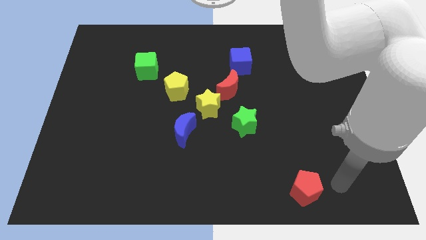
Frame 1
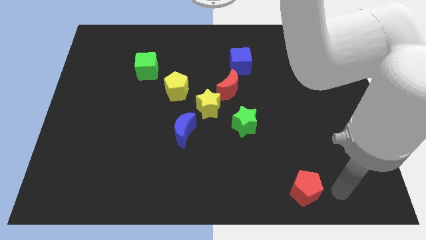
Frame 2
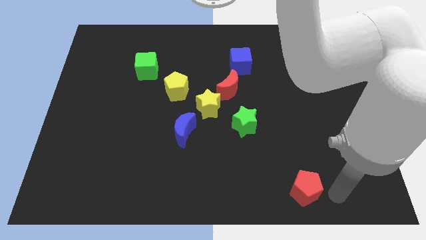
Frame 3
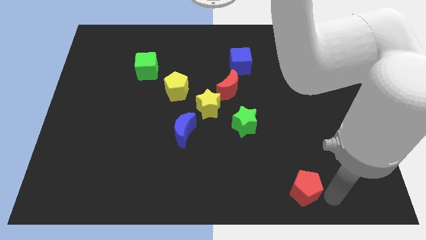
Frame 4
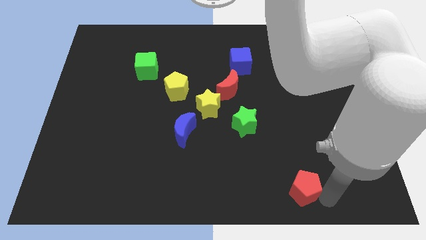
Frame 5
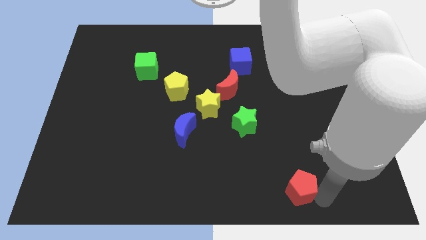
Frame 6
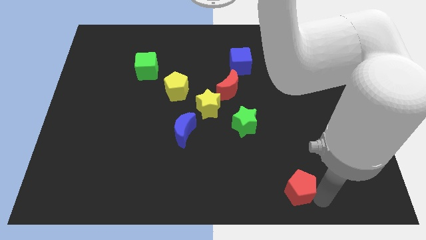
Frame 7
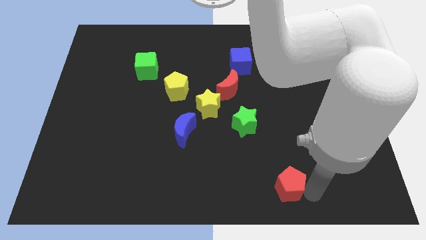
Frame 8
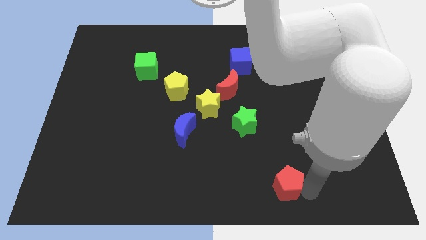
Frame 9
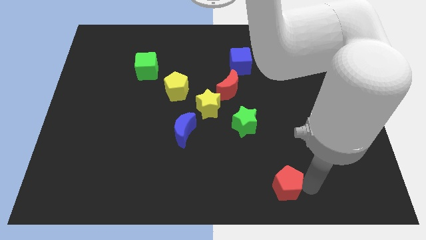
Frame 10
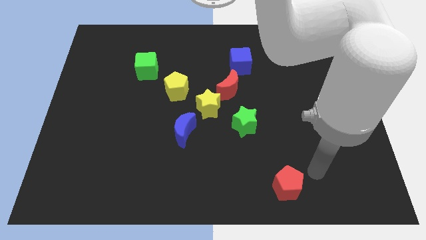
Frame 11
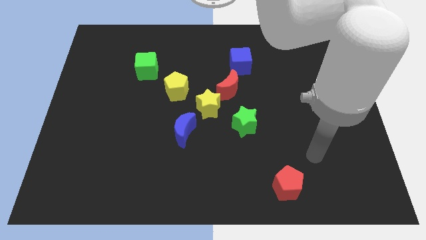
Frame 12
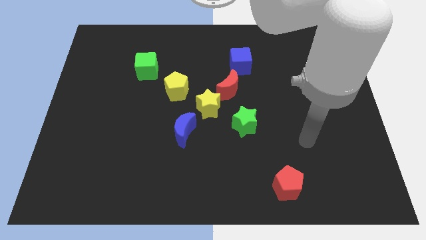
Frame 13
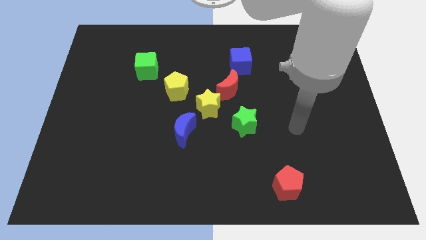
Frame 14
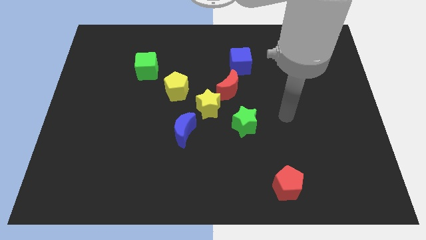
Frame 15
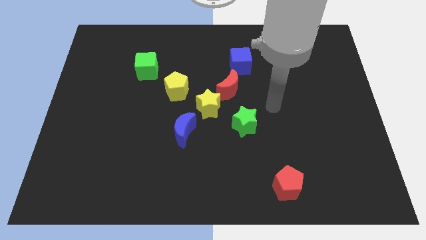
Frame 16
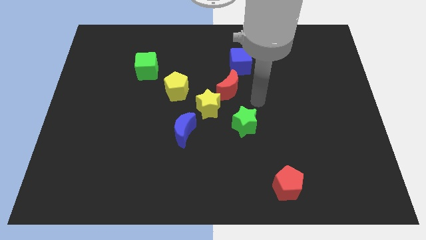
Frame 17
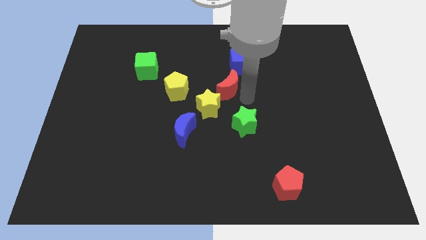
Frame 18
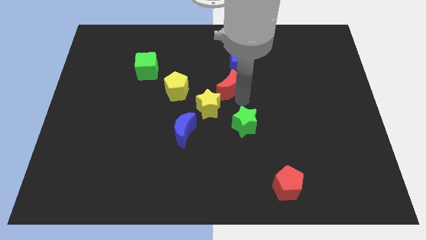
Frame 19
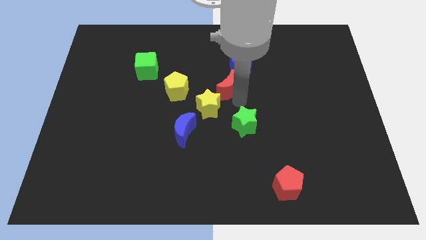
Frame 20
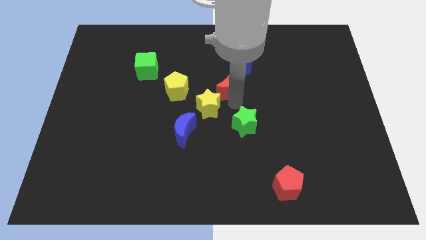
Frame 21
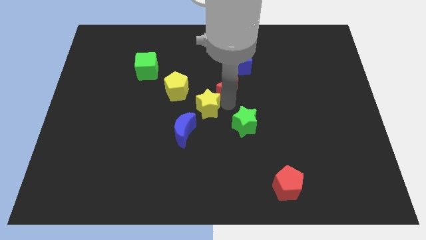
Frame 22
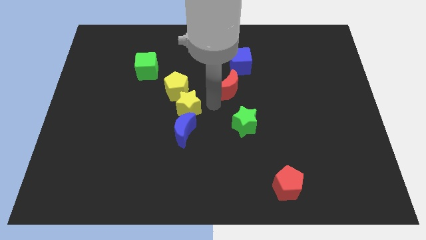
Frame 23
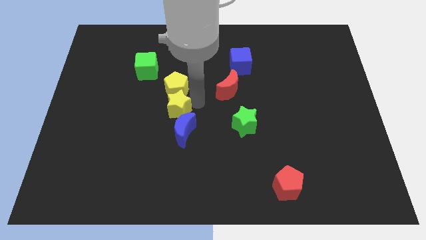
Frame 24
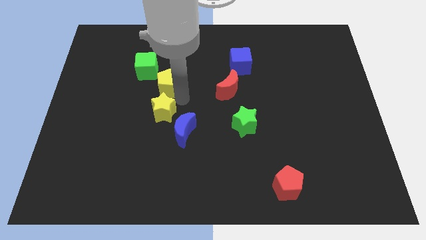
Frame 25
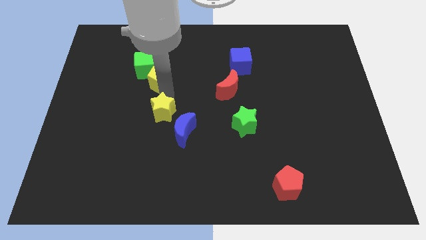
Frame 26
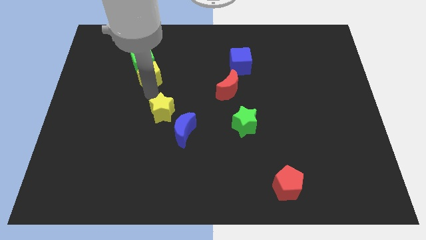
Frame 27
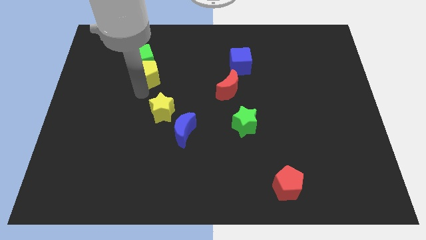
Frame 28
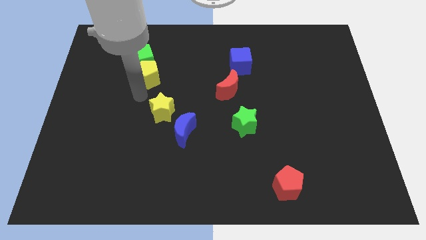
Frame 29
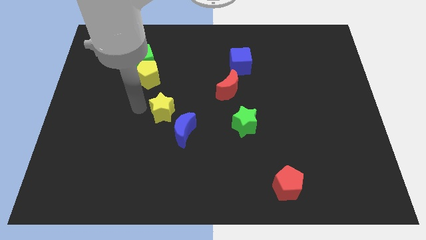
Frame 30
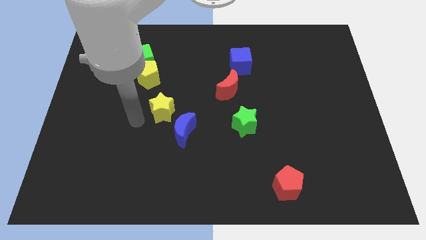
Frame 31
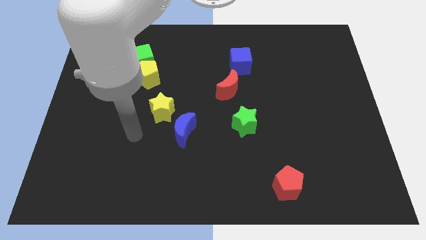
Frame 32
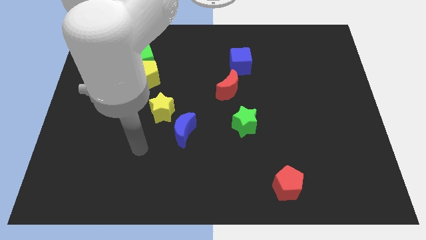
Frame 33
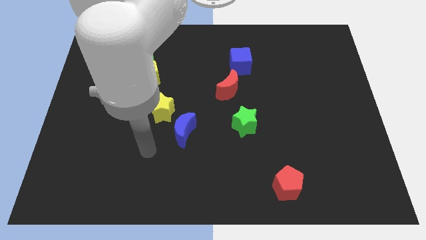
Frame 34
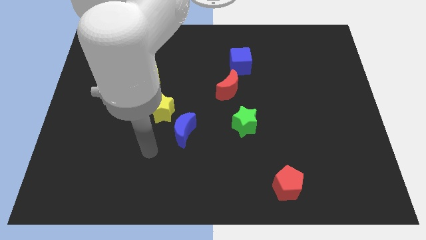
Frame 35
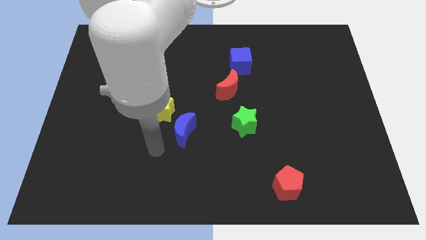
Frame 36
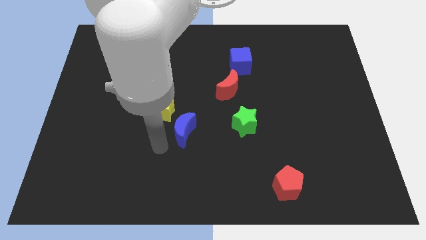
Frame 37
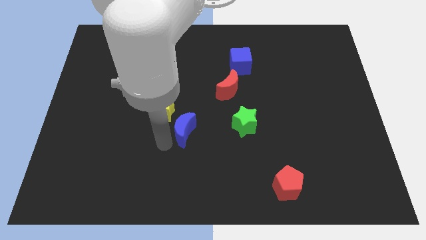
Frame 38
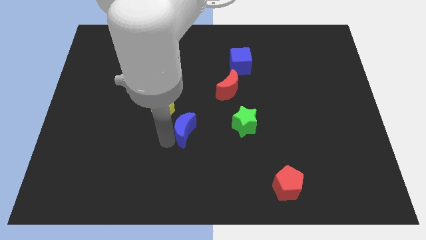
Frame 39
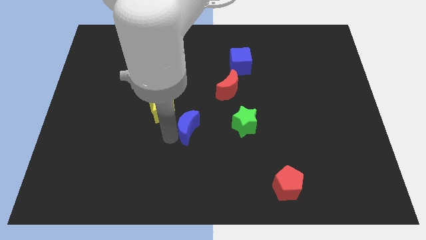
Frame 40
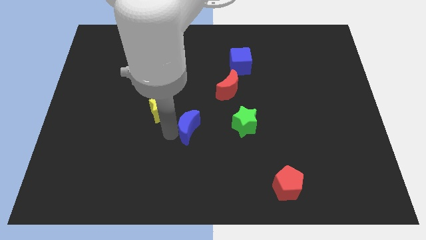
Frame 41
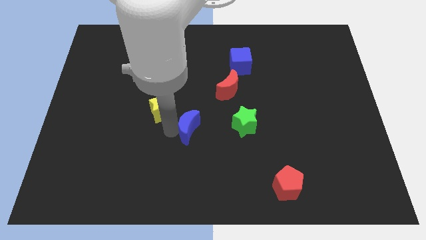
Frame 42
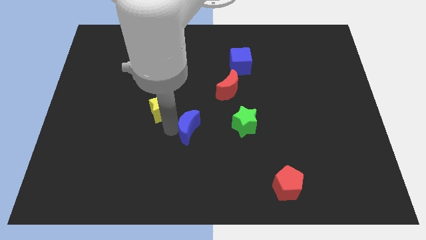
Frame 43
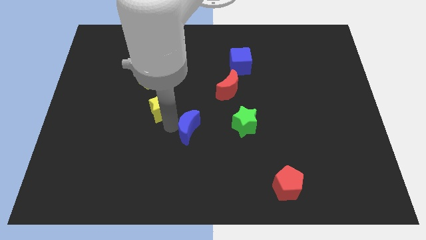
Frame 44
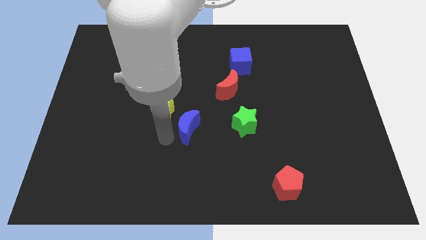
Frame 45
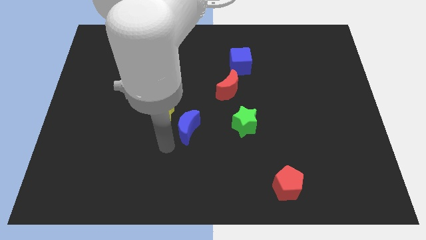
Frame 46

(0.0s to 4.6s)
move yellow star above blue moon

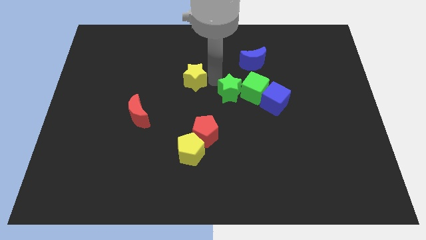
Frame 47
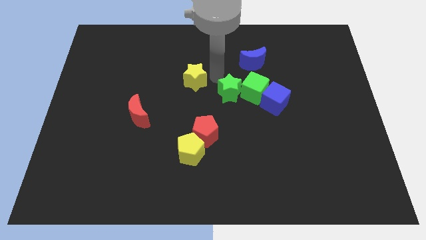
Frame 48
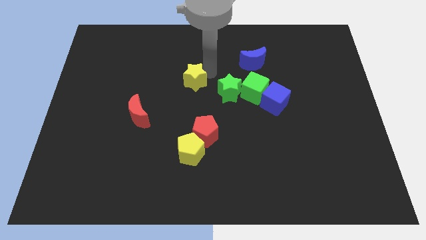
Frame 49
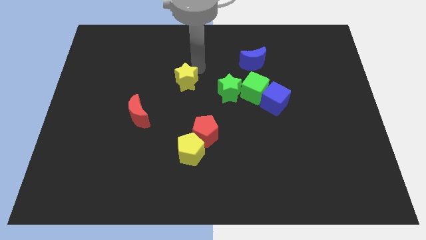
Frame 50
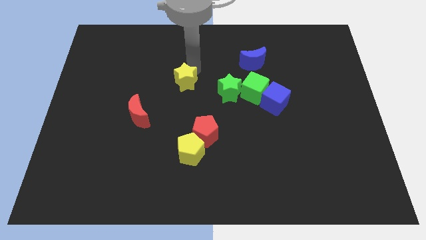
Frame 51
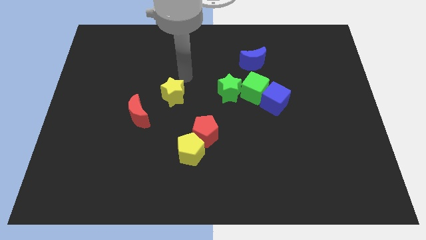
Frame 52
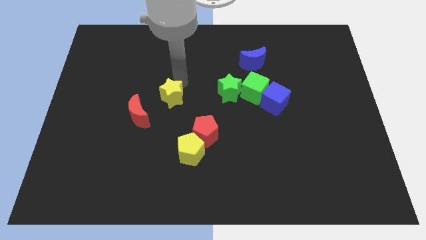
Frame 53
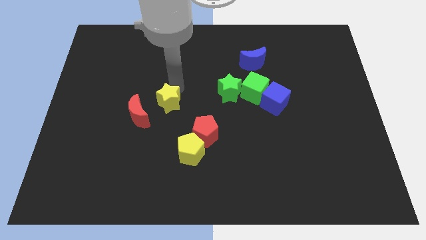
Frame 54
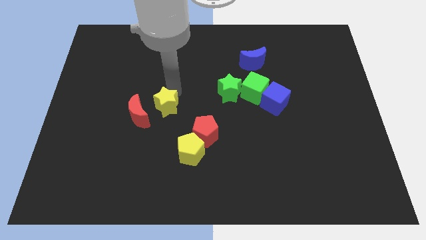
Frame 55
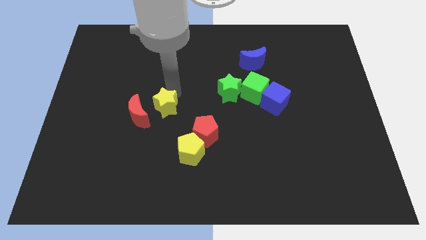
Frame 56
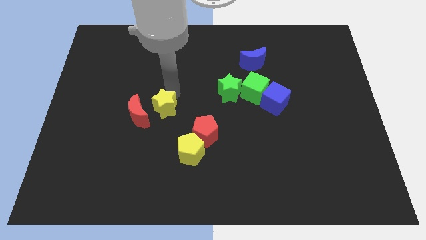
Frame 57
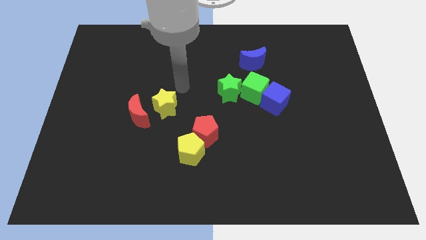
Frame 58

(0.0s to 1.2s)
place yellow star beside red crescent

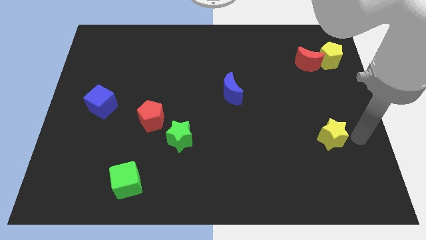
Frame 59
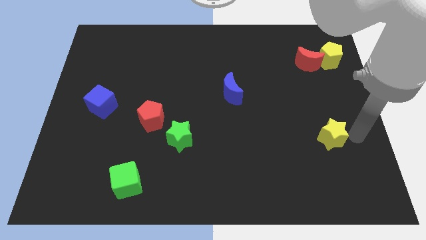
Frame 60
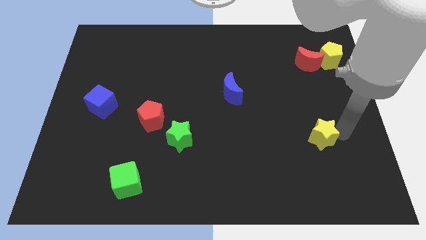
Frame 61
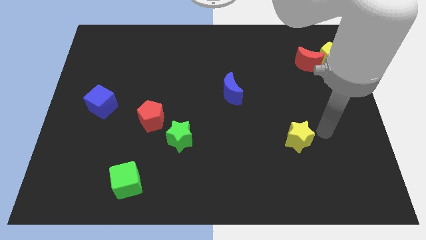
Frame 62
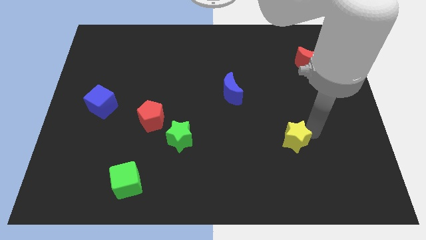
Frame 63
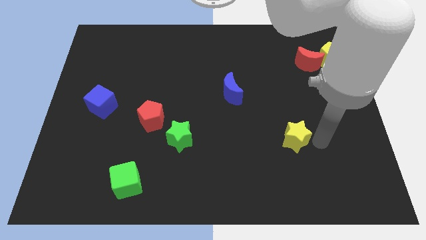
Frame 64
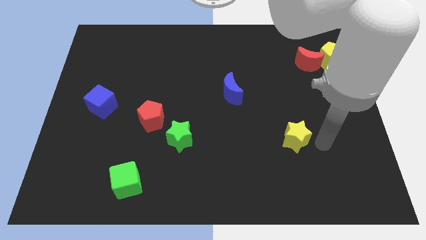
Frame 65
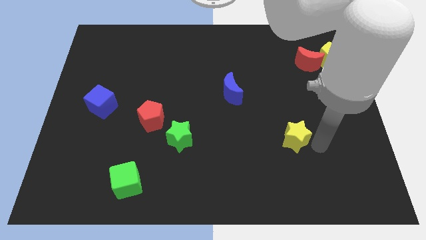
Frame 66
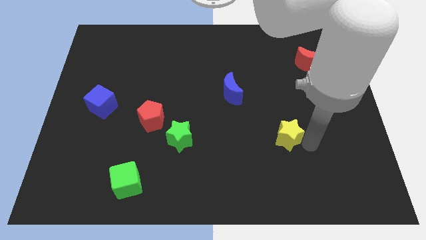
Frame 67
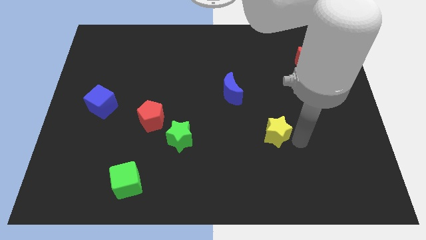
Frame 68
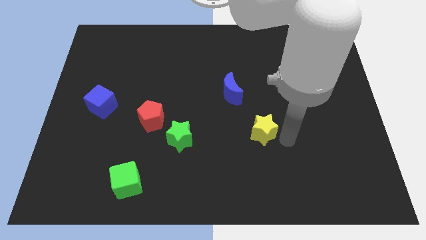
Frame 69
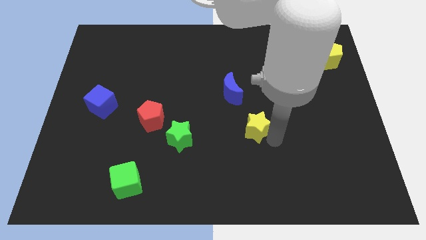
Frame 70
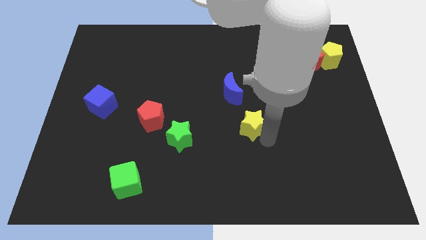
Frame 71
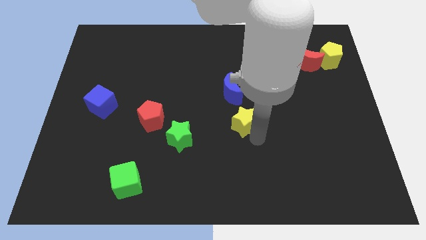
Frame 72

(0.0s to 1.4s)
move the yellow star below the blue crescent

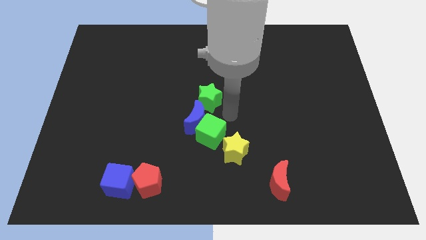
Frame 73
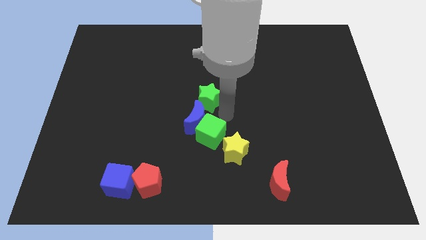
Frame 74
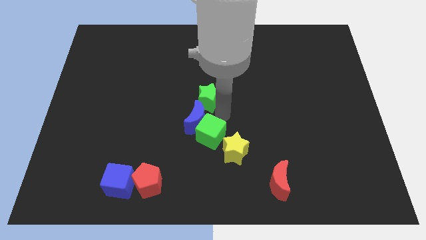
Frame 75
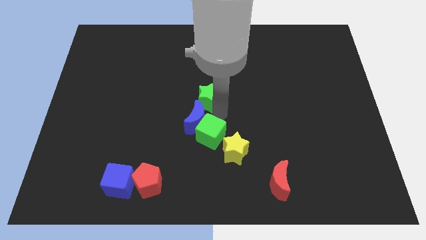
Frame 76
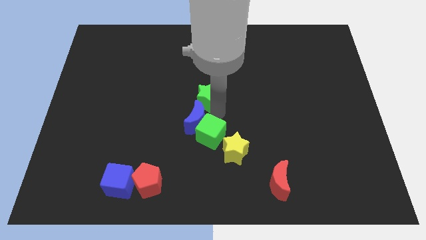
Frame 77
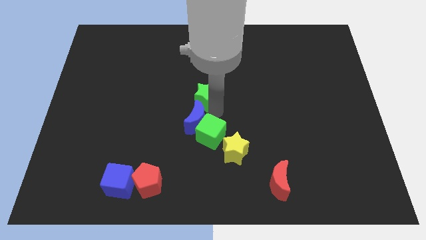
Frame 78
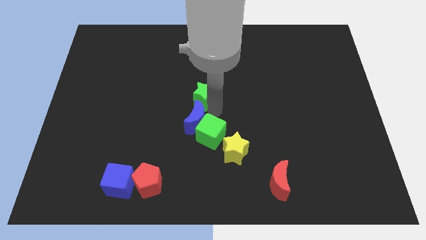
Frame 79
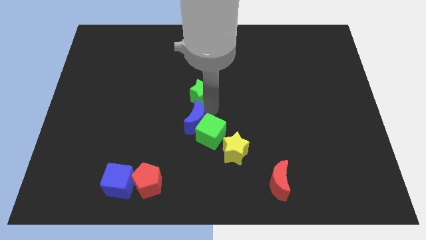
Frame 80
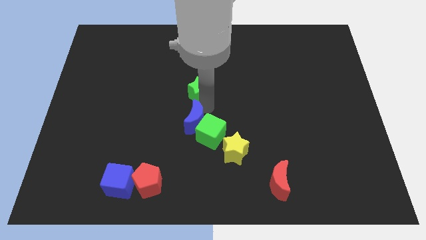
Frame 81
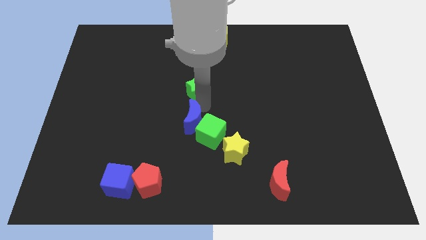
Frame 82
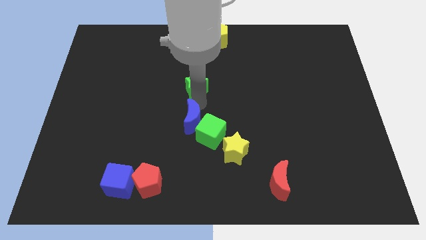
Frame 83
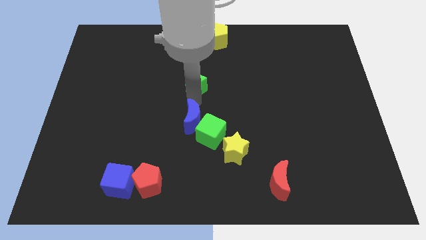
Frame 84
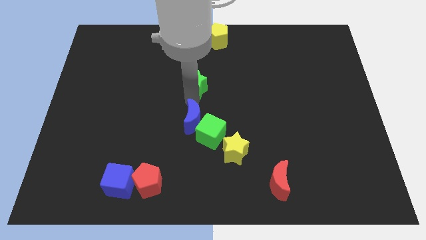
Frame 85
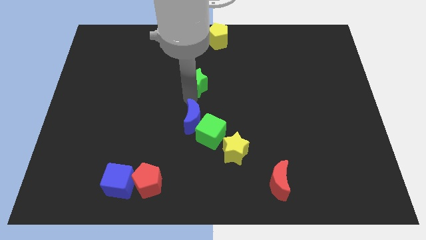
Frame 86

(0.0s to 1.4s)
place the green star above the blue moon

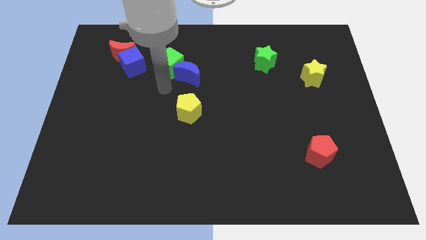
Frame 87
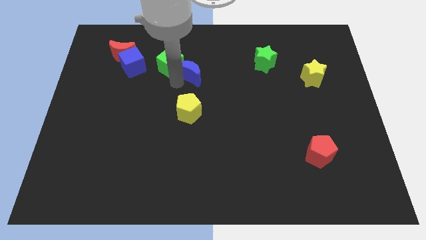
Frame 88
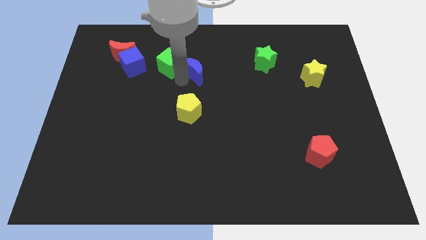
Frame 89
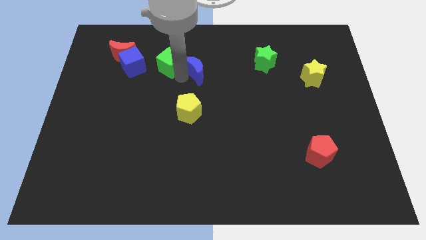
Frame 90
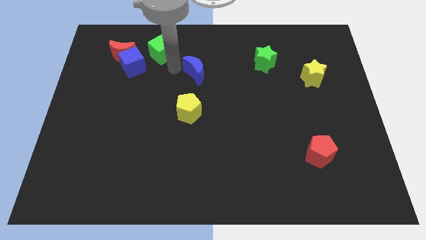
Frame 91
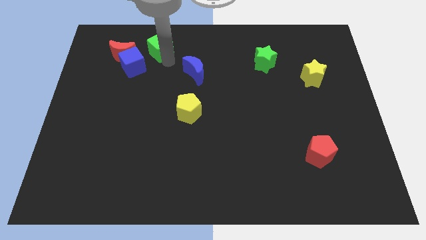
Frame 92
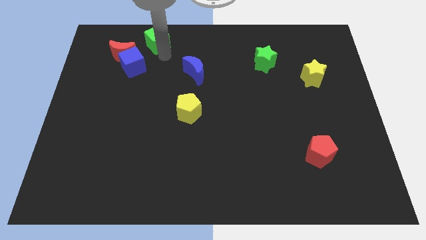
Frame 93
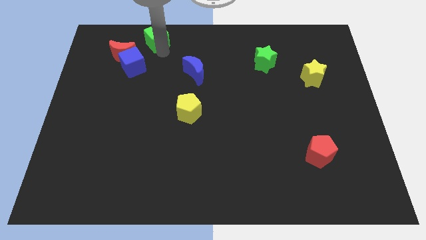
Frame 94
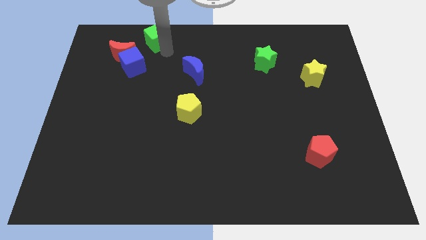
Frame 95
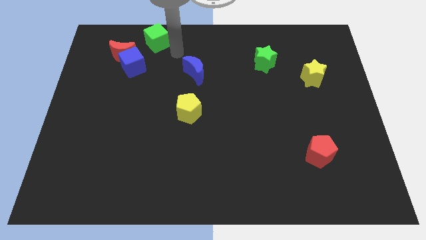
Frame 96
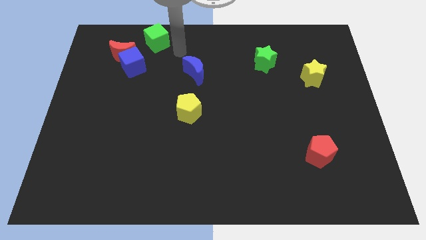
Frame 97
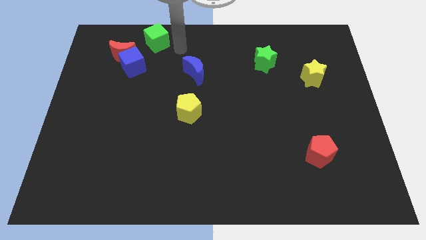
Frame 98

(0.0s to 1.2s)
move the green cube towards the top center of board
